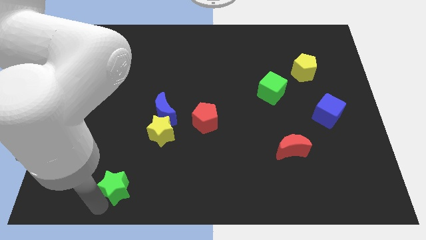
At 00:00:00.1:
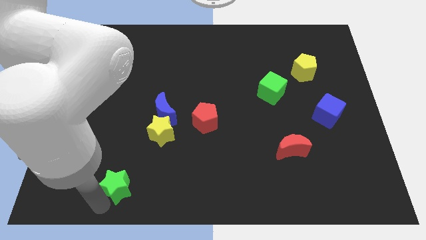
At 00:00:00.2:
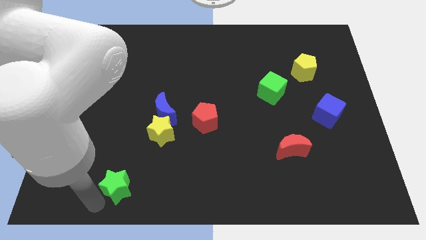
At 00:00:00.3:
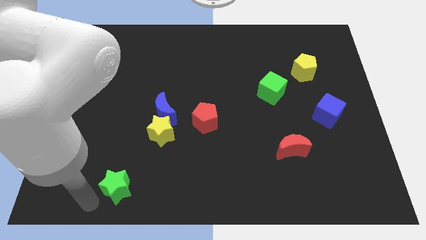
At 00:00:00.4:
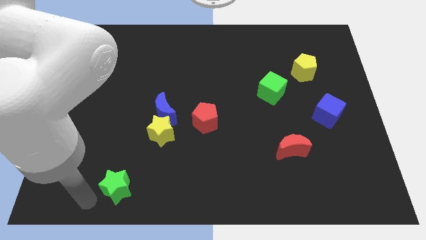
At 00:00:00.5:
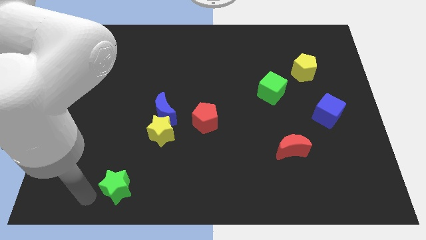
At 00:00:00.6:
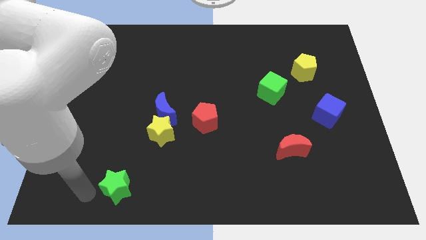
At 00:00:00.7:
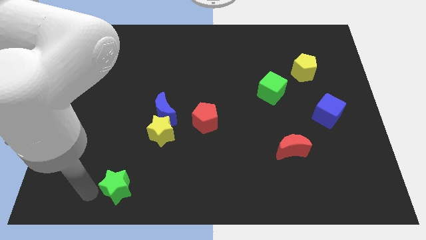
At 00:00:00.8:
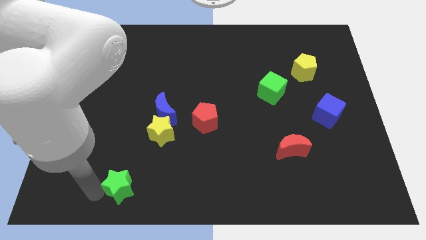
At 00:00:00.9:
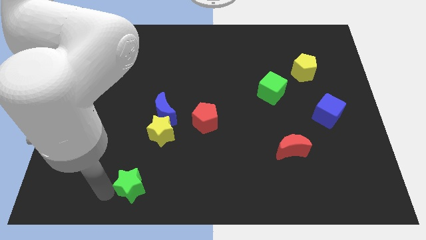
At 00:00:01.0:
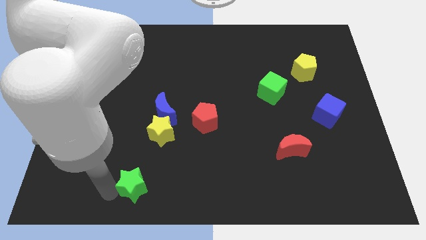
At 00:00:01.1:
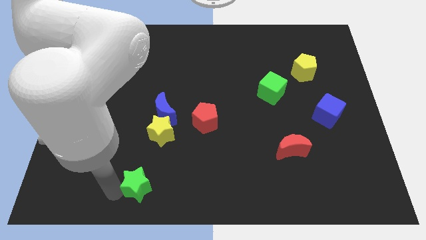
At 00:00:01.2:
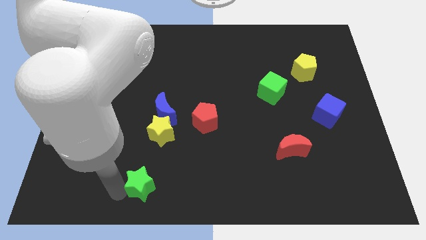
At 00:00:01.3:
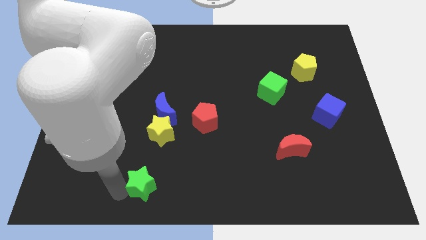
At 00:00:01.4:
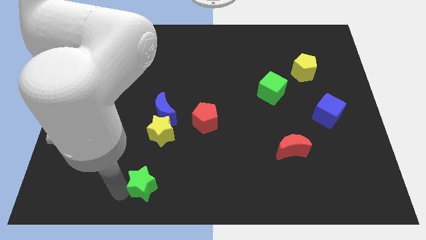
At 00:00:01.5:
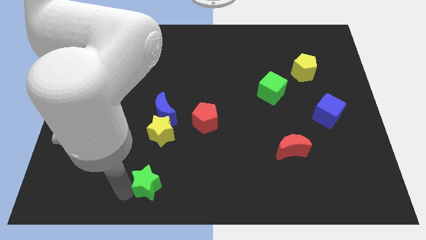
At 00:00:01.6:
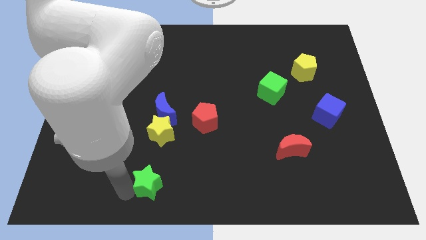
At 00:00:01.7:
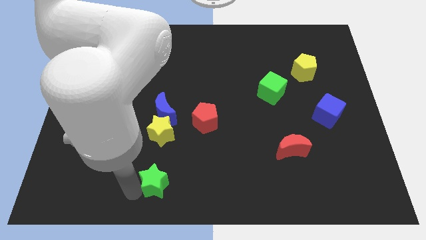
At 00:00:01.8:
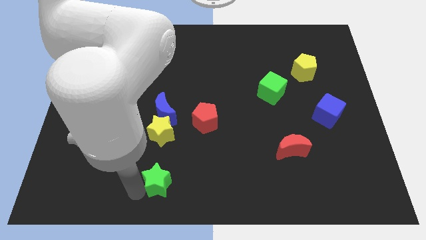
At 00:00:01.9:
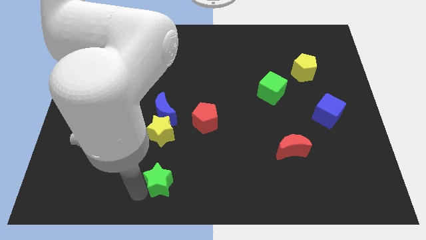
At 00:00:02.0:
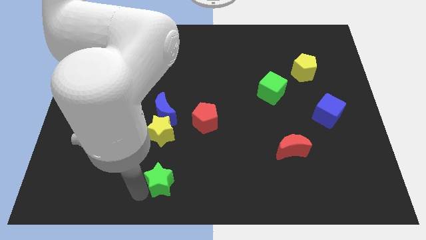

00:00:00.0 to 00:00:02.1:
slide green star below yellow star

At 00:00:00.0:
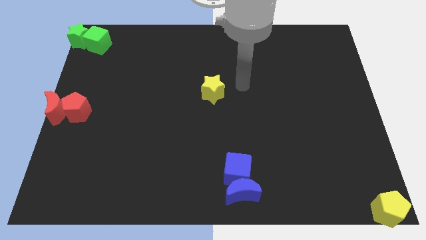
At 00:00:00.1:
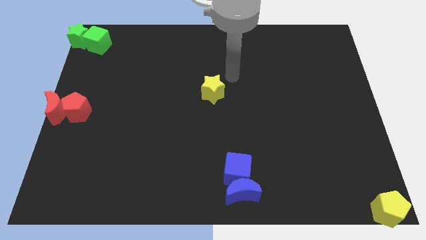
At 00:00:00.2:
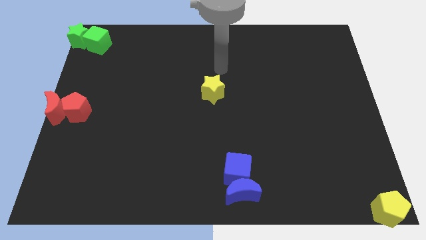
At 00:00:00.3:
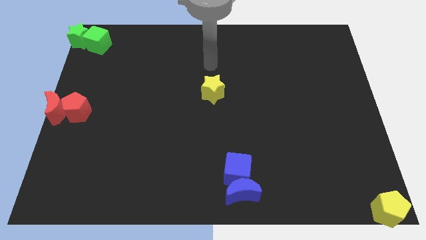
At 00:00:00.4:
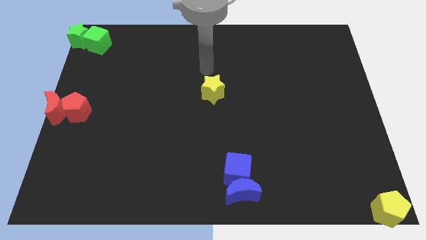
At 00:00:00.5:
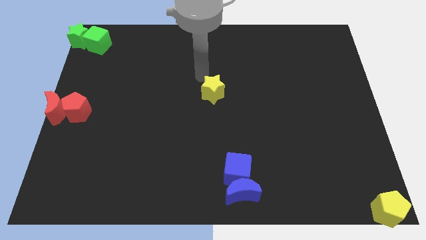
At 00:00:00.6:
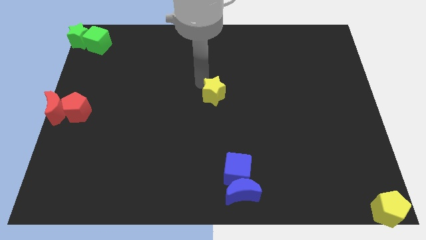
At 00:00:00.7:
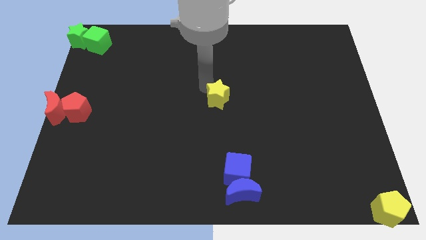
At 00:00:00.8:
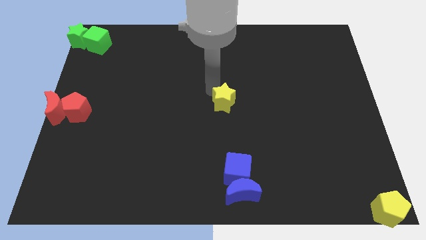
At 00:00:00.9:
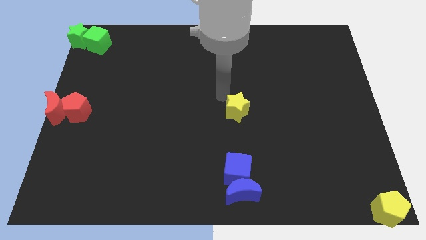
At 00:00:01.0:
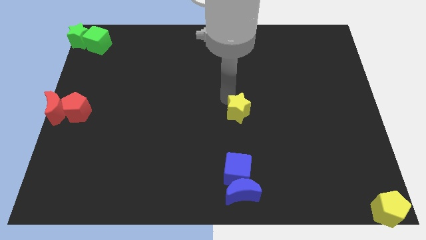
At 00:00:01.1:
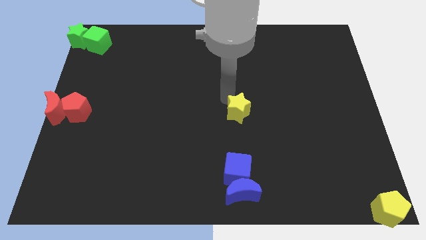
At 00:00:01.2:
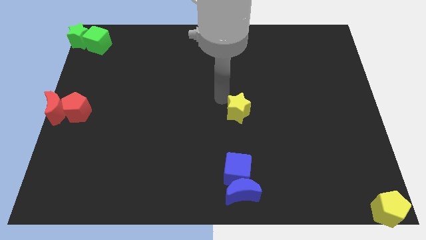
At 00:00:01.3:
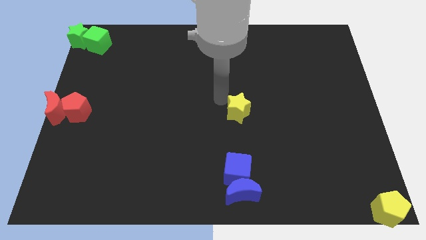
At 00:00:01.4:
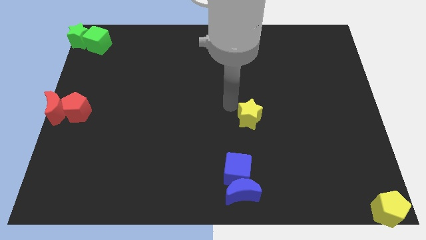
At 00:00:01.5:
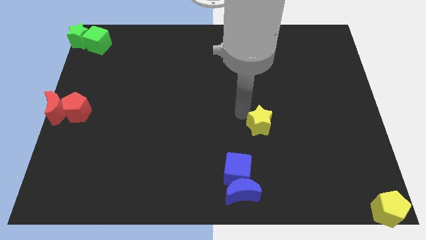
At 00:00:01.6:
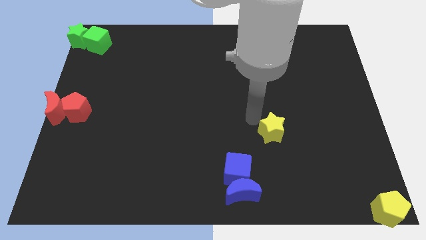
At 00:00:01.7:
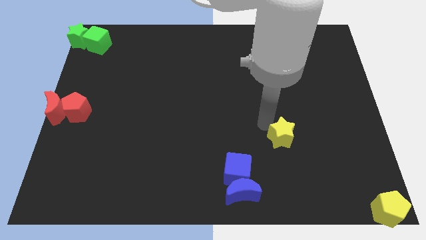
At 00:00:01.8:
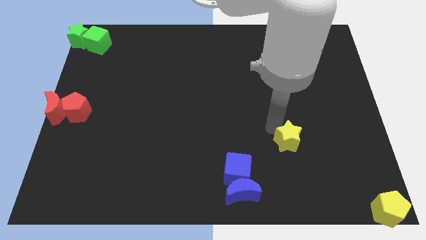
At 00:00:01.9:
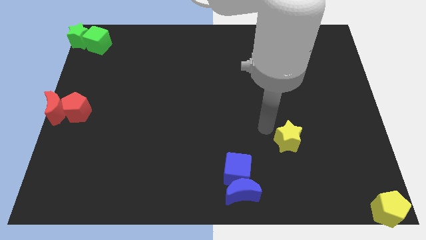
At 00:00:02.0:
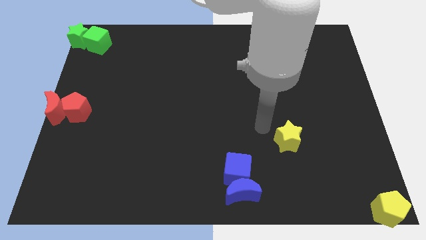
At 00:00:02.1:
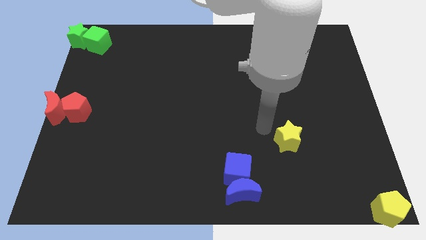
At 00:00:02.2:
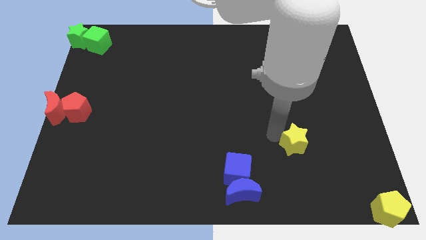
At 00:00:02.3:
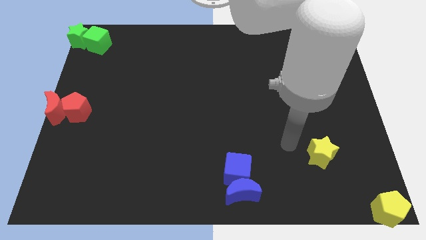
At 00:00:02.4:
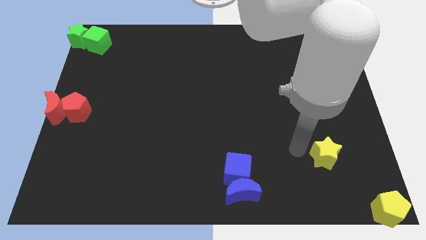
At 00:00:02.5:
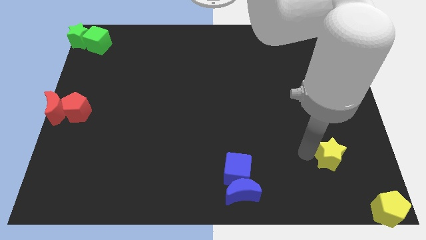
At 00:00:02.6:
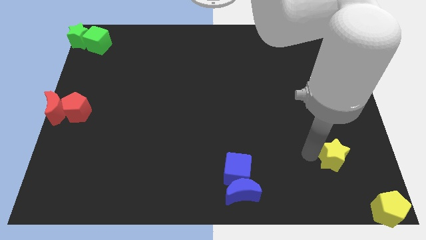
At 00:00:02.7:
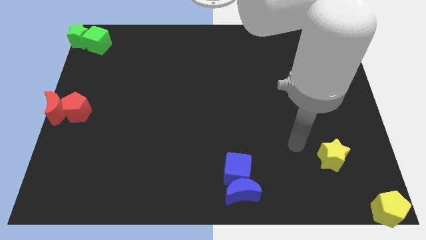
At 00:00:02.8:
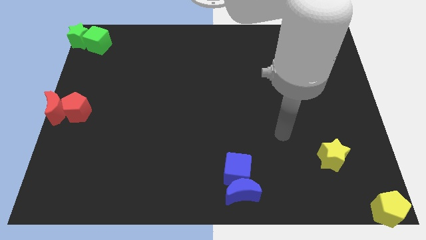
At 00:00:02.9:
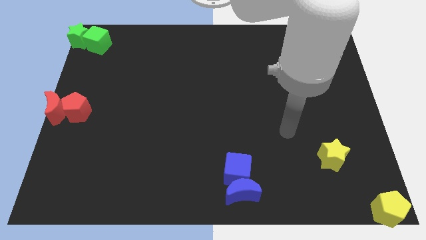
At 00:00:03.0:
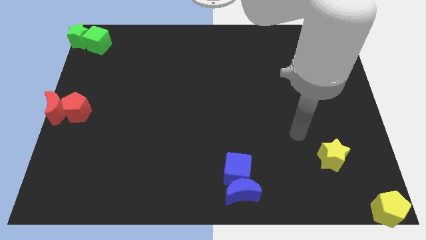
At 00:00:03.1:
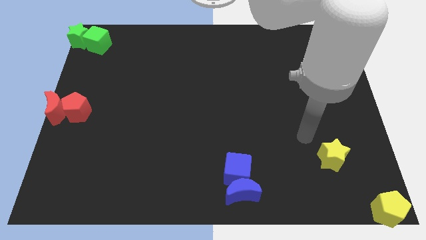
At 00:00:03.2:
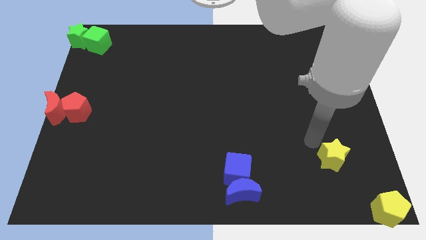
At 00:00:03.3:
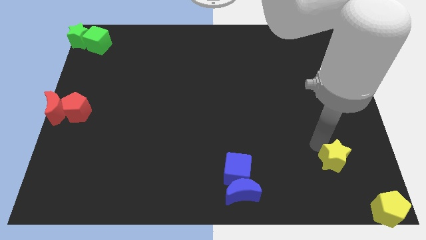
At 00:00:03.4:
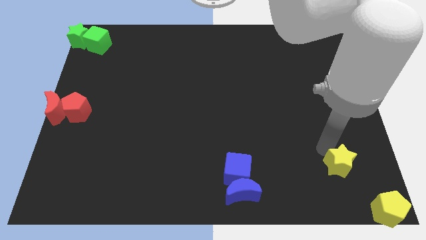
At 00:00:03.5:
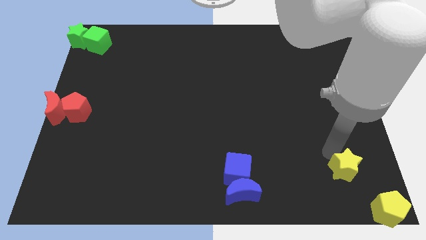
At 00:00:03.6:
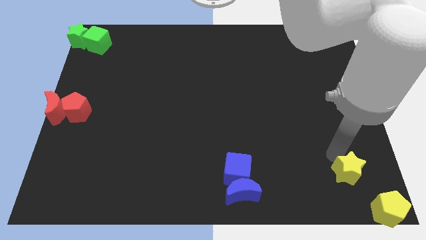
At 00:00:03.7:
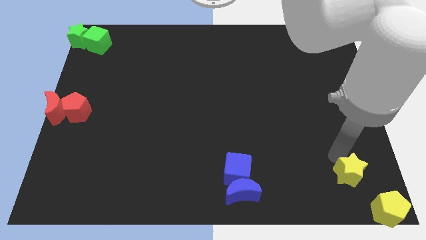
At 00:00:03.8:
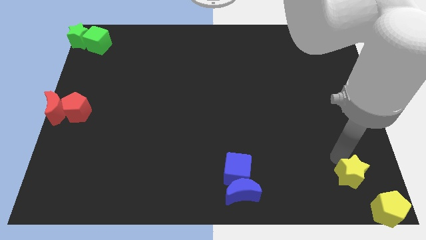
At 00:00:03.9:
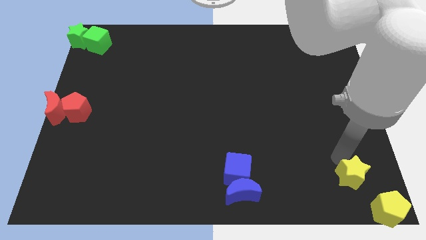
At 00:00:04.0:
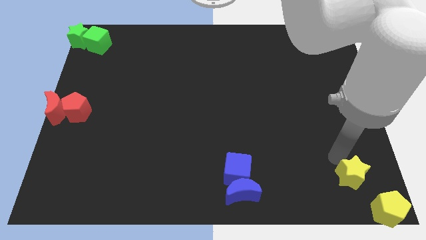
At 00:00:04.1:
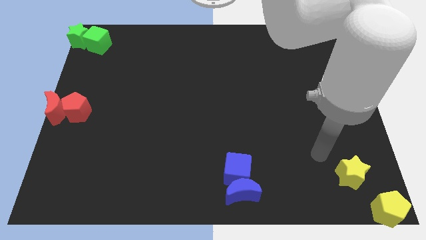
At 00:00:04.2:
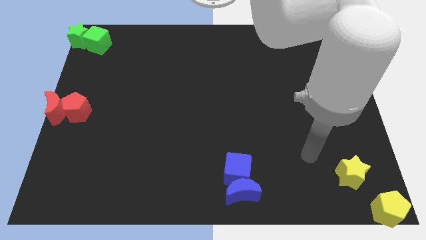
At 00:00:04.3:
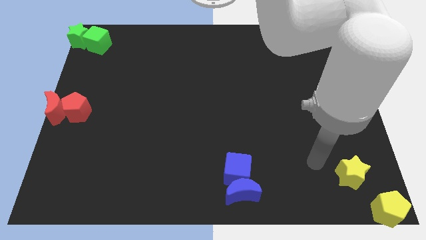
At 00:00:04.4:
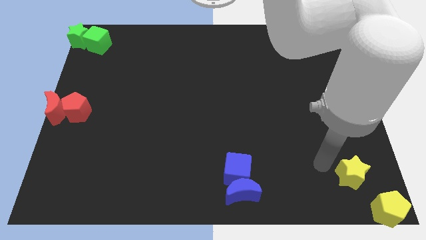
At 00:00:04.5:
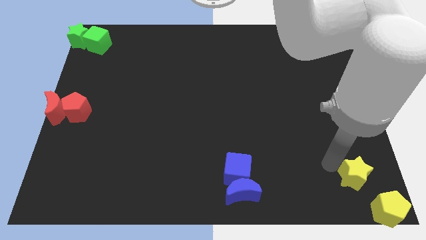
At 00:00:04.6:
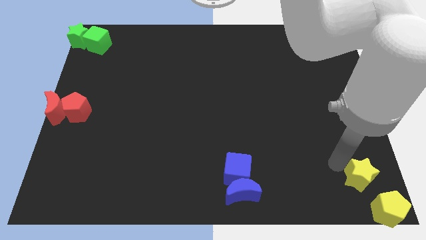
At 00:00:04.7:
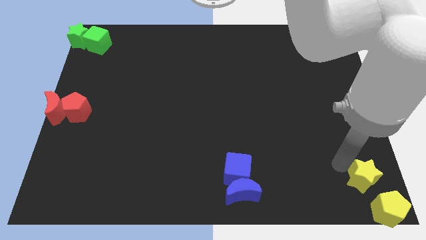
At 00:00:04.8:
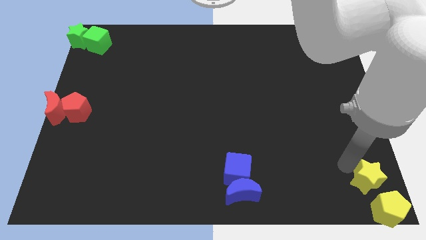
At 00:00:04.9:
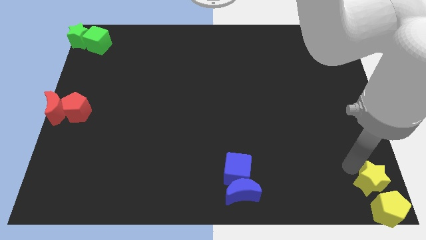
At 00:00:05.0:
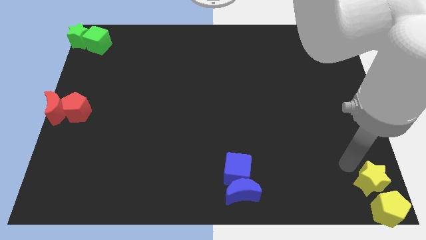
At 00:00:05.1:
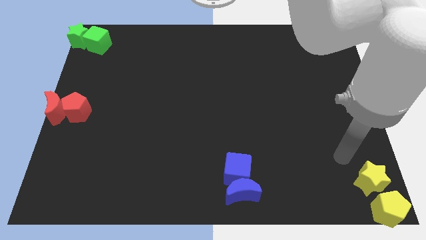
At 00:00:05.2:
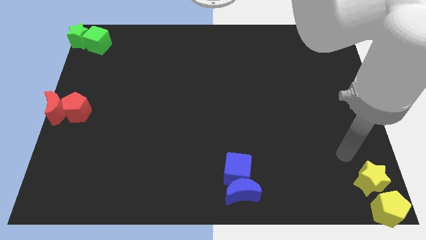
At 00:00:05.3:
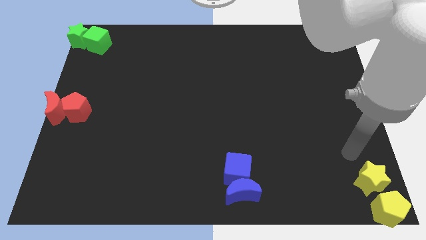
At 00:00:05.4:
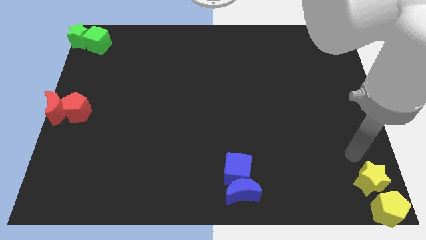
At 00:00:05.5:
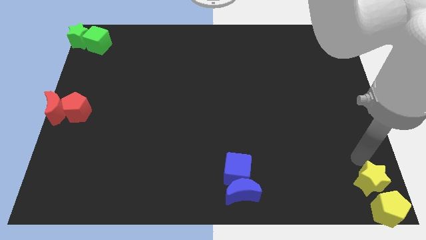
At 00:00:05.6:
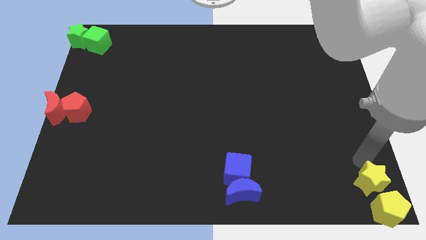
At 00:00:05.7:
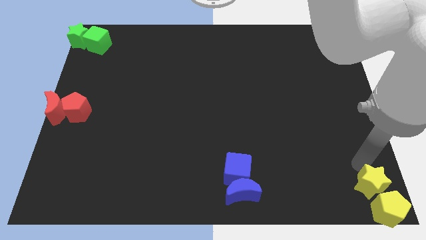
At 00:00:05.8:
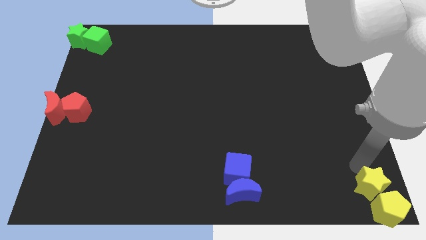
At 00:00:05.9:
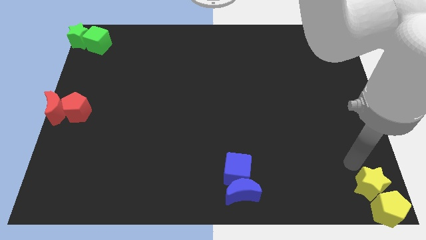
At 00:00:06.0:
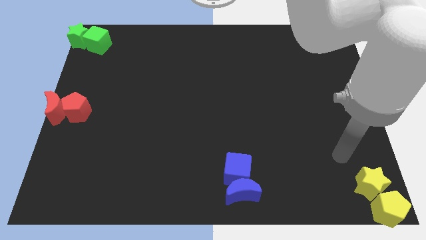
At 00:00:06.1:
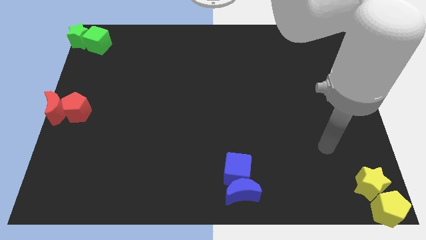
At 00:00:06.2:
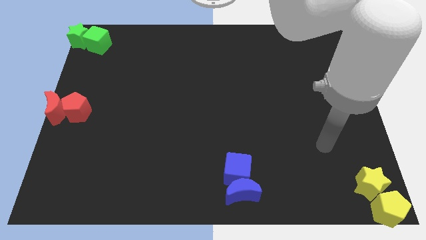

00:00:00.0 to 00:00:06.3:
push the yellow star to the top left of the yellow pentagon

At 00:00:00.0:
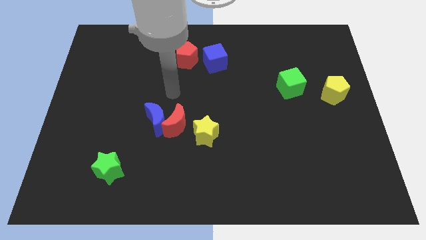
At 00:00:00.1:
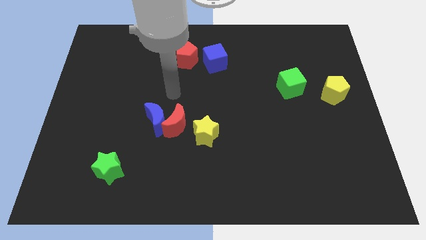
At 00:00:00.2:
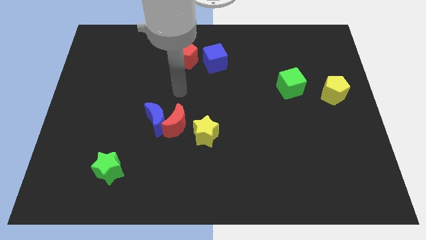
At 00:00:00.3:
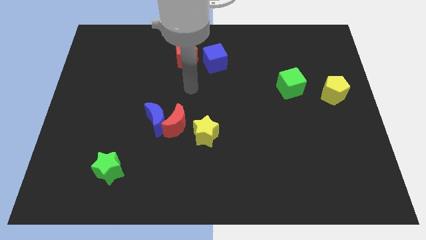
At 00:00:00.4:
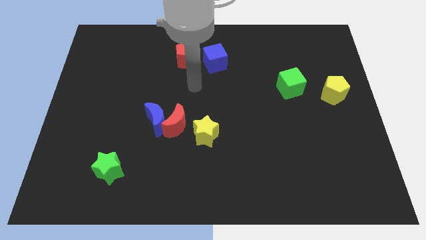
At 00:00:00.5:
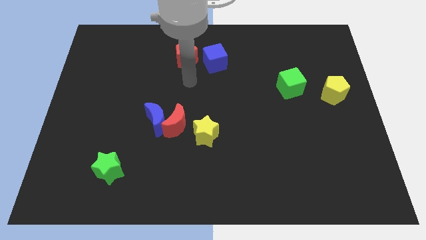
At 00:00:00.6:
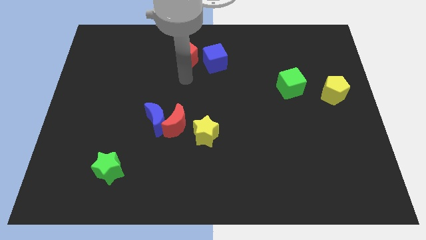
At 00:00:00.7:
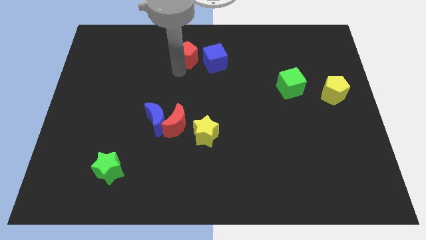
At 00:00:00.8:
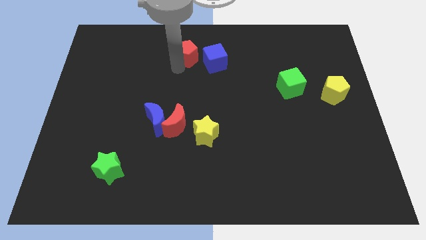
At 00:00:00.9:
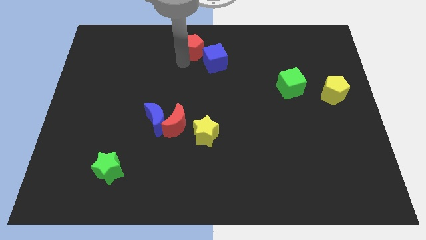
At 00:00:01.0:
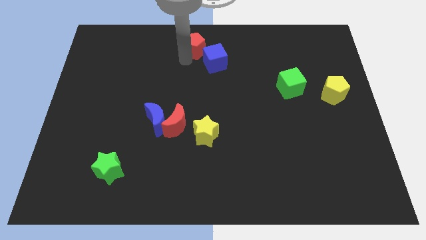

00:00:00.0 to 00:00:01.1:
slightly move the red pentagon towards the top center
